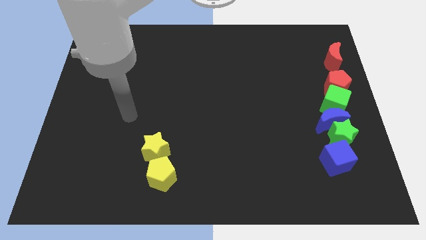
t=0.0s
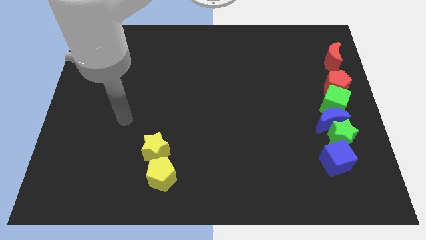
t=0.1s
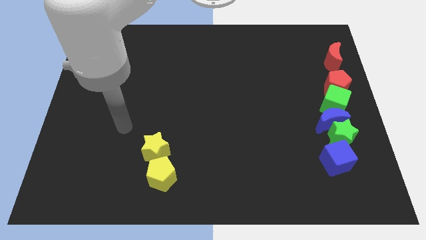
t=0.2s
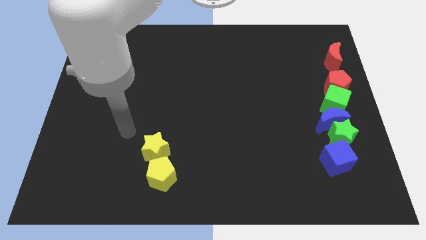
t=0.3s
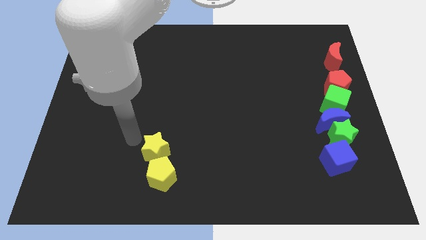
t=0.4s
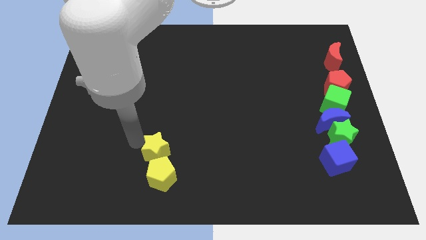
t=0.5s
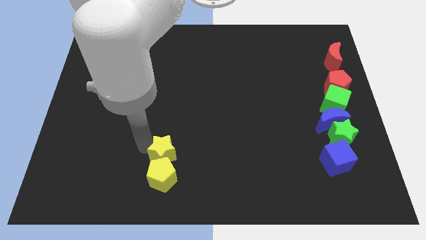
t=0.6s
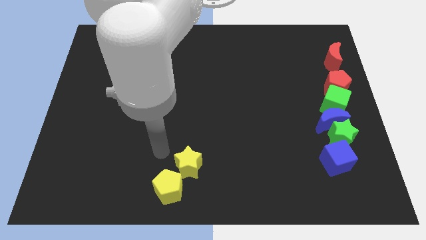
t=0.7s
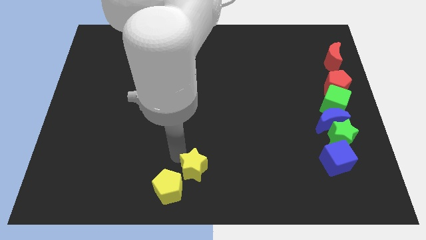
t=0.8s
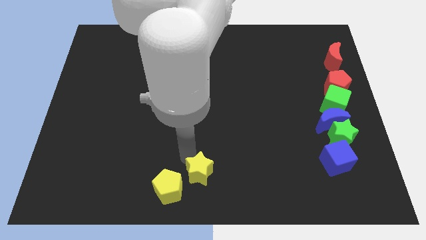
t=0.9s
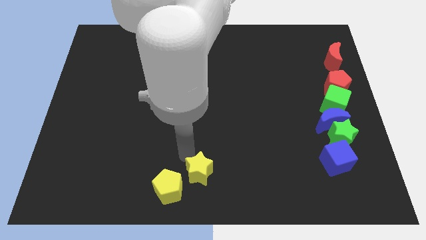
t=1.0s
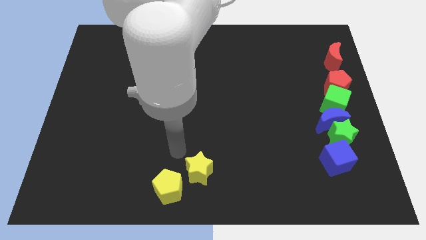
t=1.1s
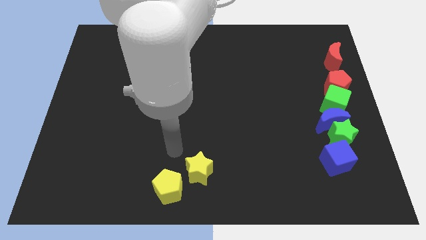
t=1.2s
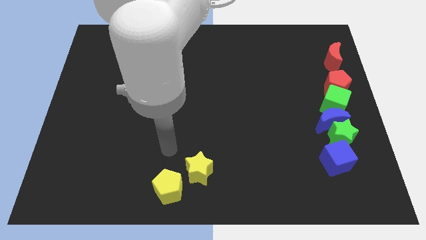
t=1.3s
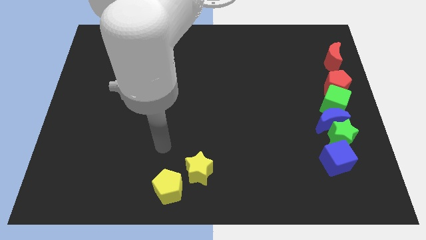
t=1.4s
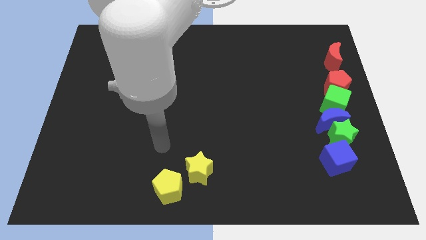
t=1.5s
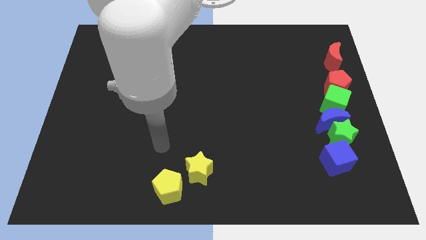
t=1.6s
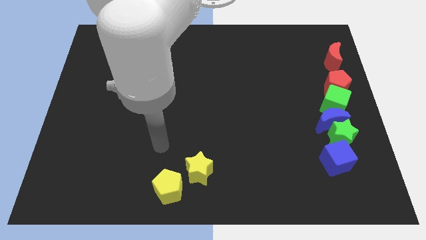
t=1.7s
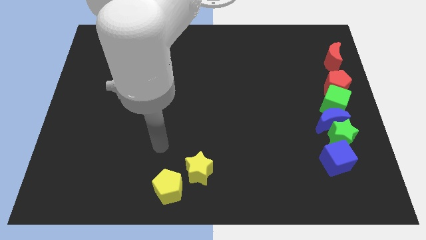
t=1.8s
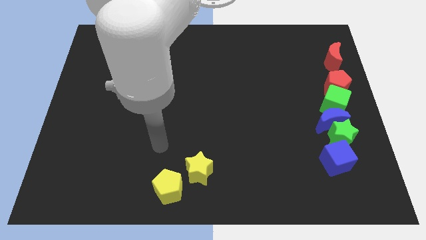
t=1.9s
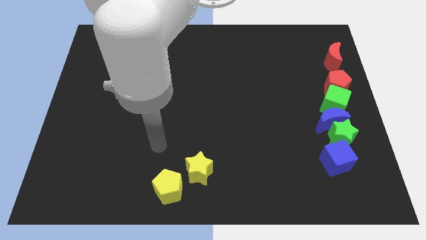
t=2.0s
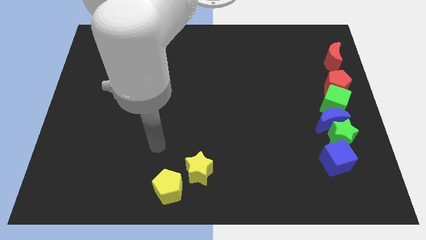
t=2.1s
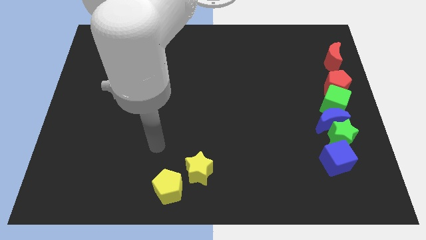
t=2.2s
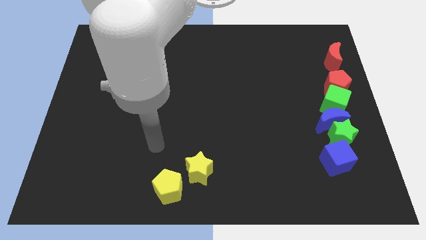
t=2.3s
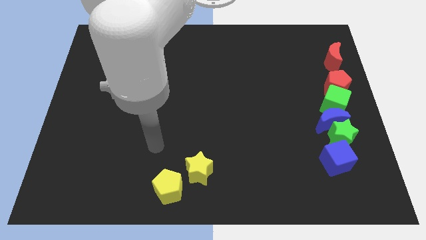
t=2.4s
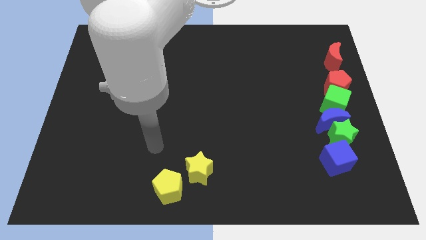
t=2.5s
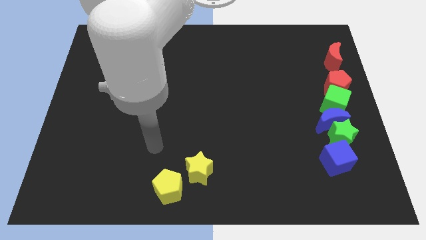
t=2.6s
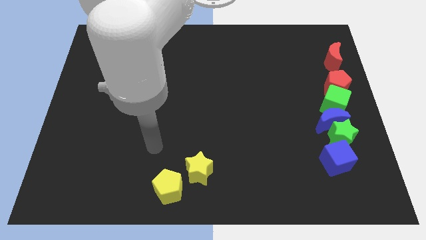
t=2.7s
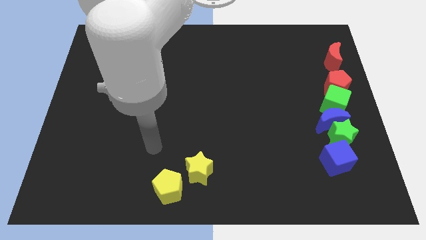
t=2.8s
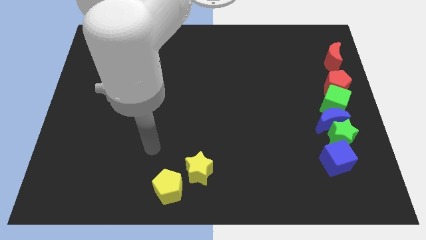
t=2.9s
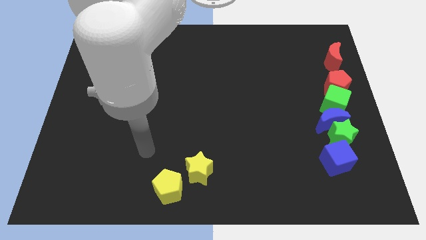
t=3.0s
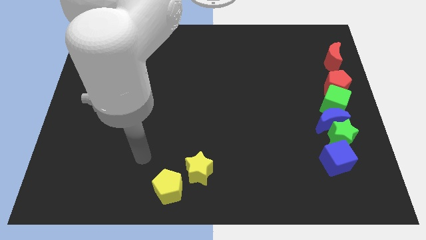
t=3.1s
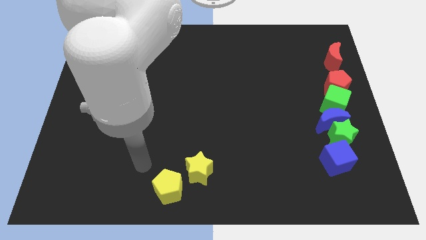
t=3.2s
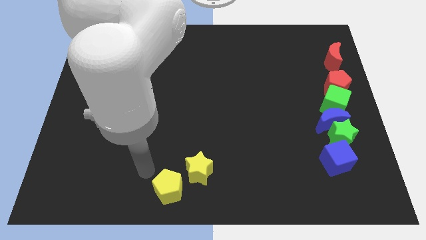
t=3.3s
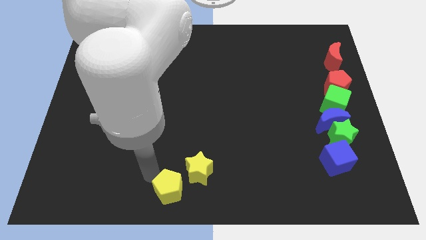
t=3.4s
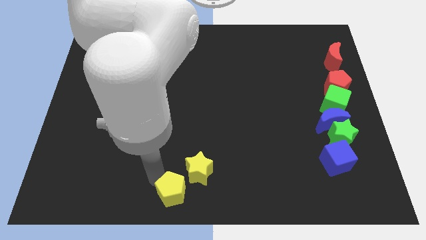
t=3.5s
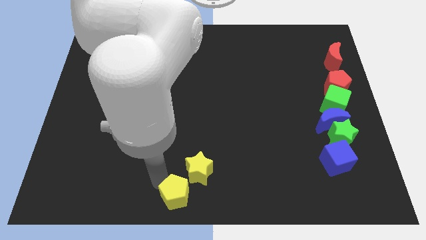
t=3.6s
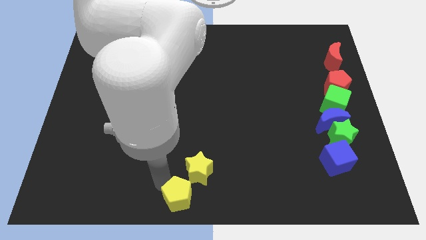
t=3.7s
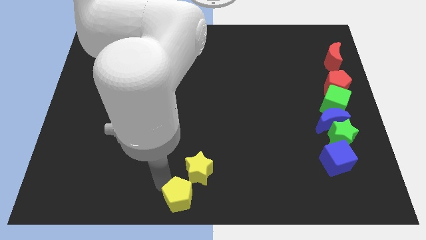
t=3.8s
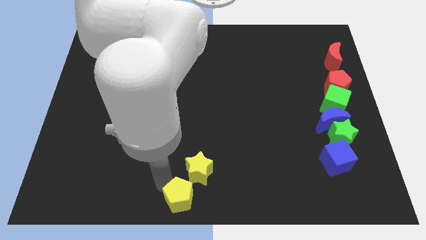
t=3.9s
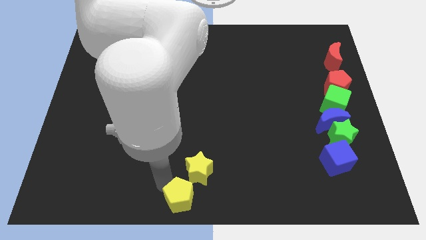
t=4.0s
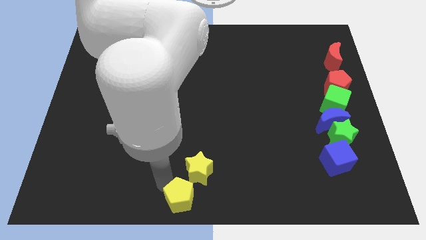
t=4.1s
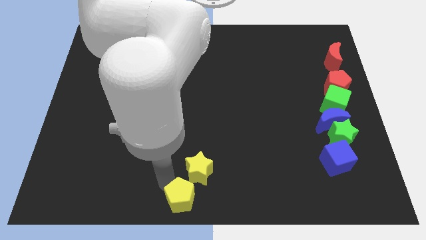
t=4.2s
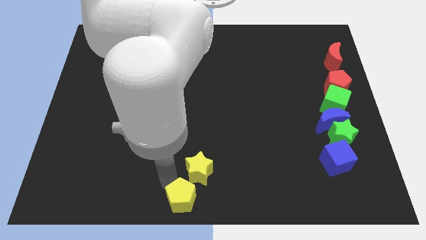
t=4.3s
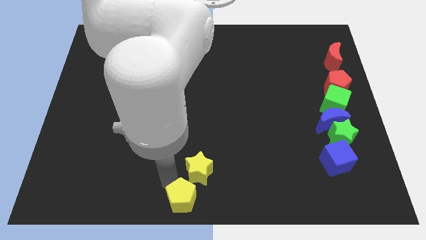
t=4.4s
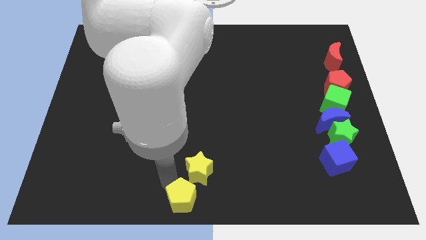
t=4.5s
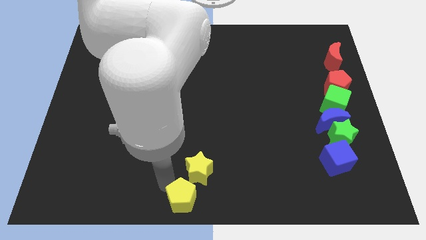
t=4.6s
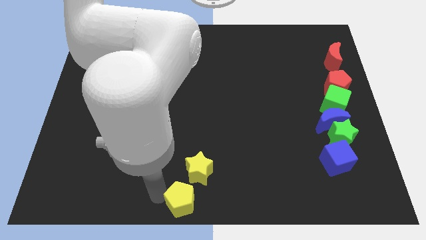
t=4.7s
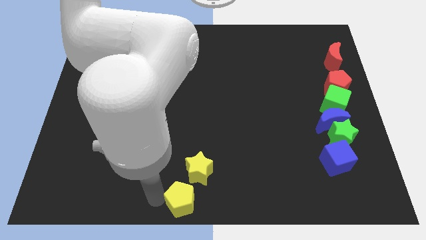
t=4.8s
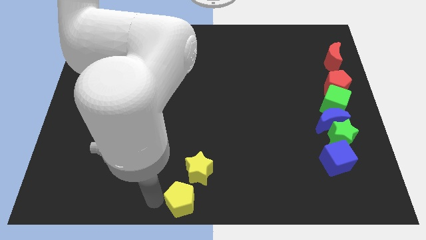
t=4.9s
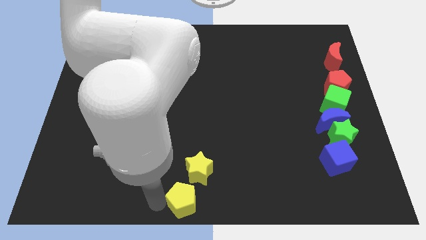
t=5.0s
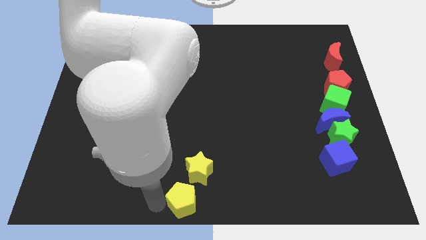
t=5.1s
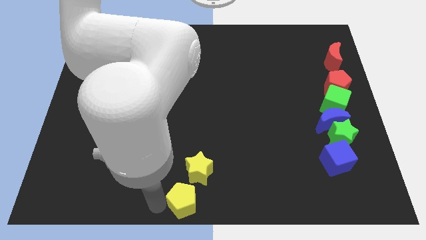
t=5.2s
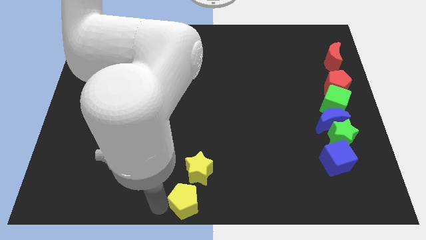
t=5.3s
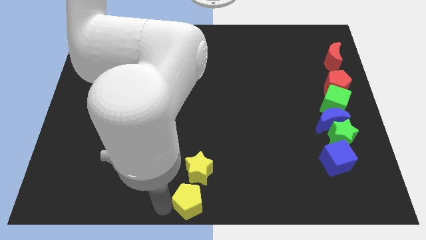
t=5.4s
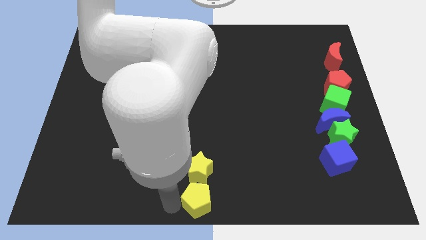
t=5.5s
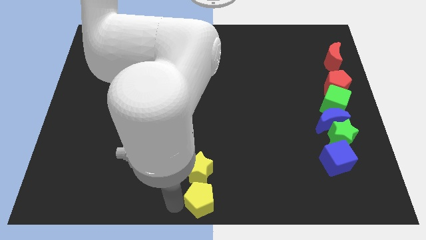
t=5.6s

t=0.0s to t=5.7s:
place both the yellow blocks at the bottom center of the board

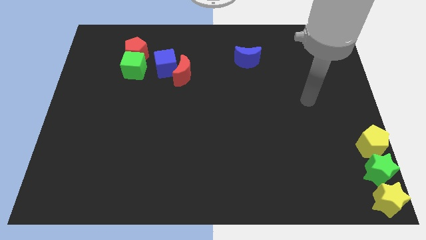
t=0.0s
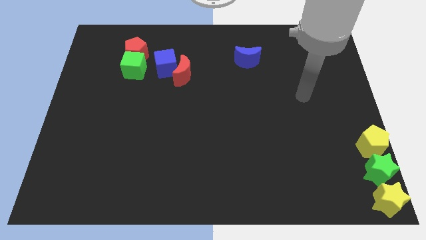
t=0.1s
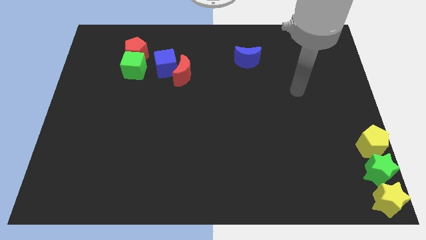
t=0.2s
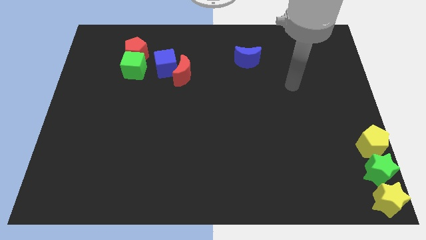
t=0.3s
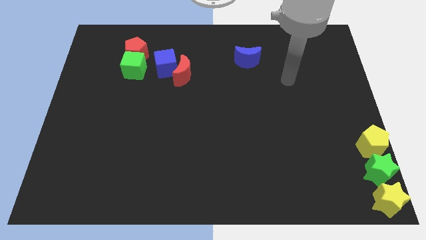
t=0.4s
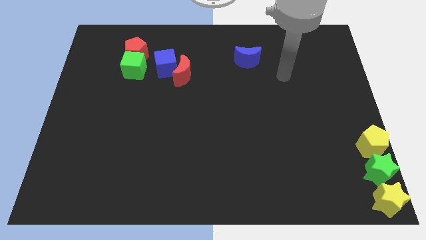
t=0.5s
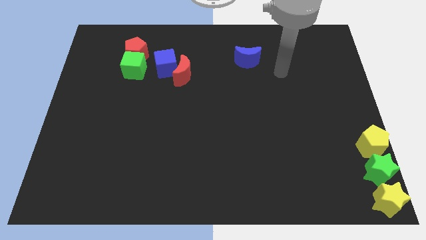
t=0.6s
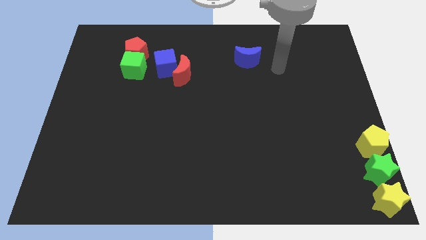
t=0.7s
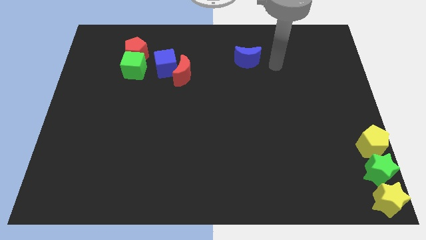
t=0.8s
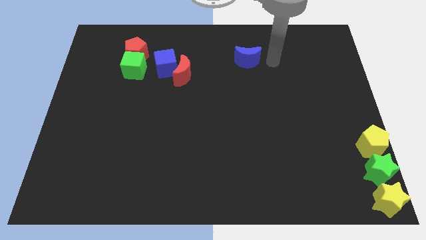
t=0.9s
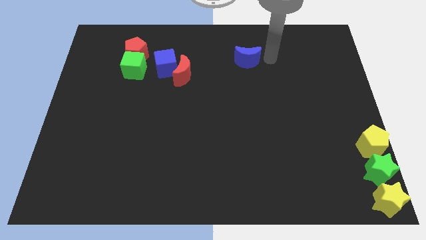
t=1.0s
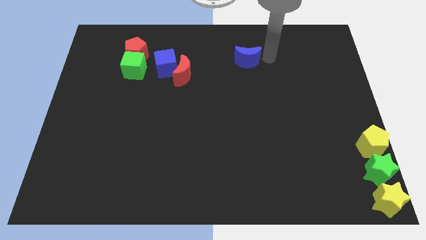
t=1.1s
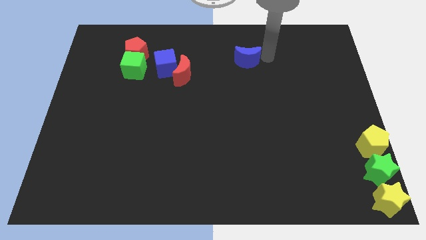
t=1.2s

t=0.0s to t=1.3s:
move your arm right to the blue crescent

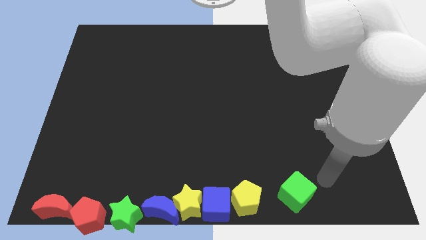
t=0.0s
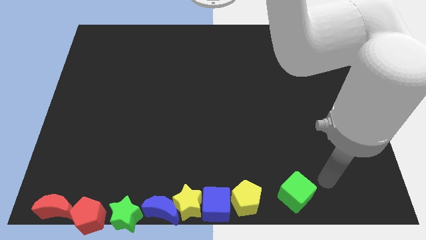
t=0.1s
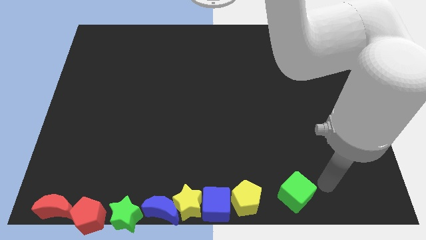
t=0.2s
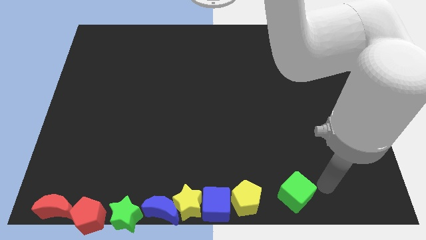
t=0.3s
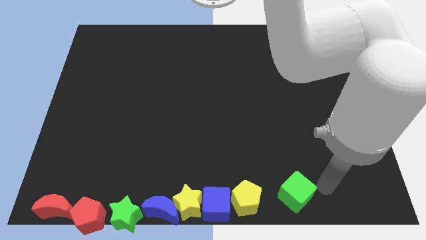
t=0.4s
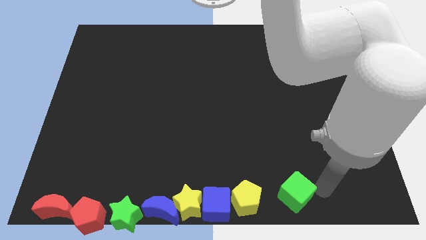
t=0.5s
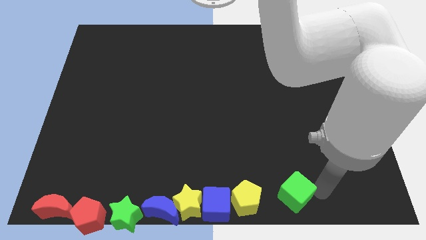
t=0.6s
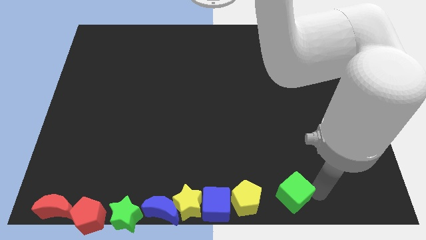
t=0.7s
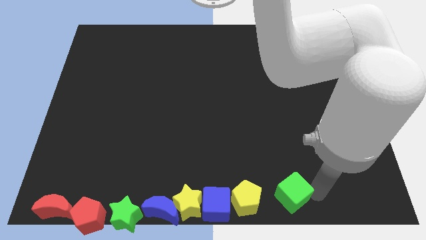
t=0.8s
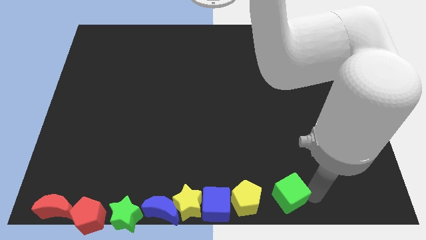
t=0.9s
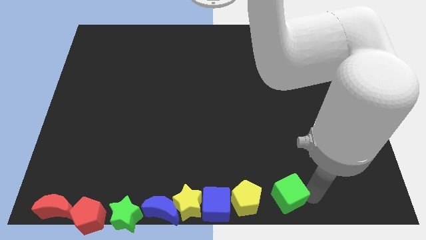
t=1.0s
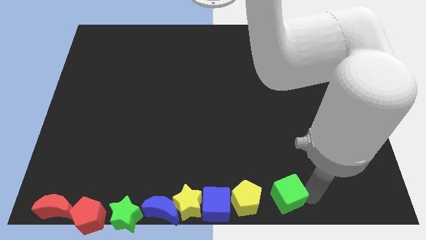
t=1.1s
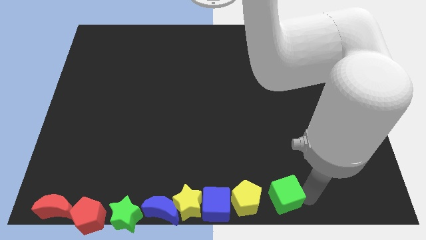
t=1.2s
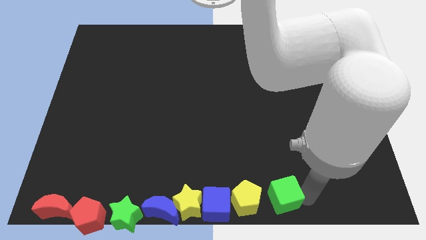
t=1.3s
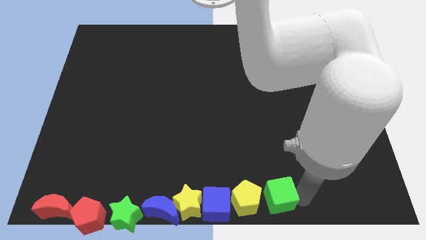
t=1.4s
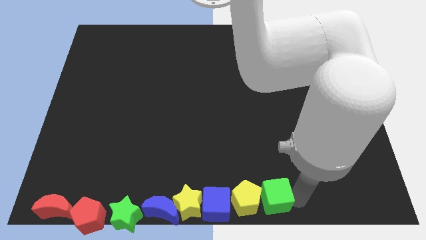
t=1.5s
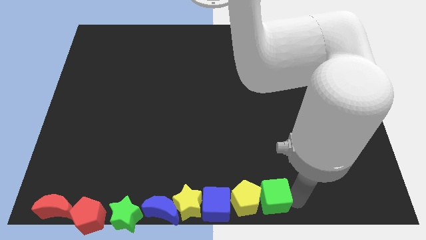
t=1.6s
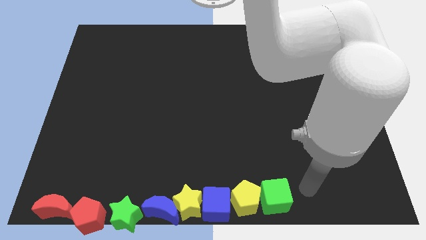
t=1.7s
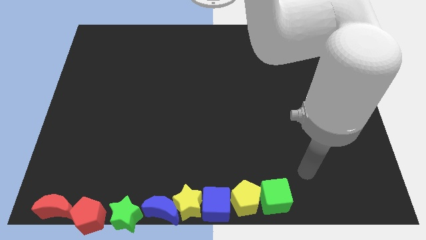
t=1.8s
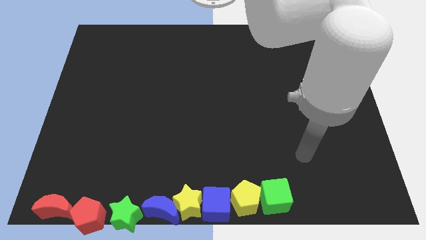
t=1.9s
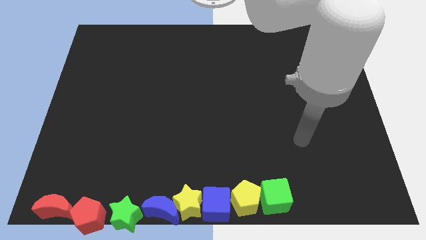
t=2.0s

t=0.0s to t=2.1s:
push the green cube into the yellow pentagon
